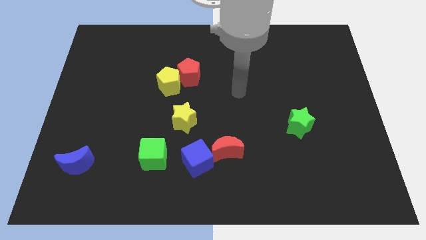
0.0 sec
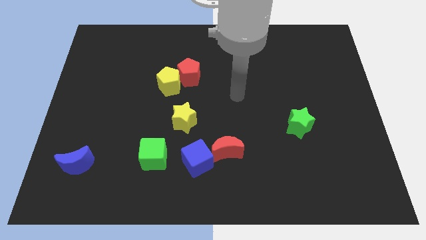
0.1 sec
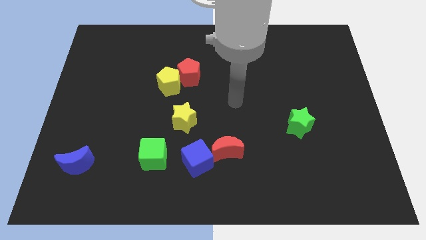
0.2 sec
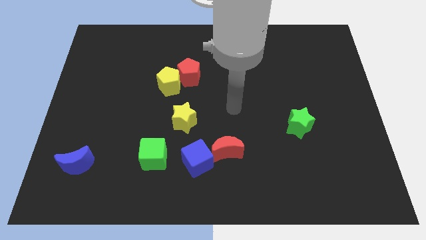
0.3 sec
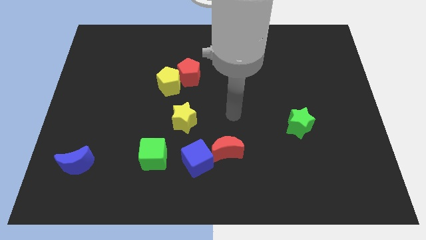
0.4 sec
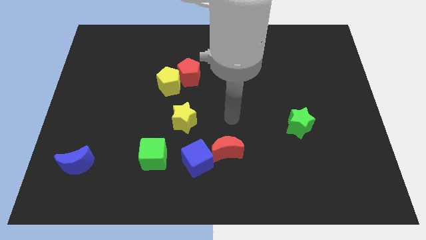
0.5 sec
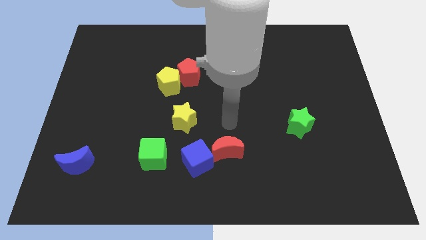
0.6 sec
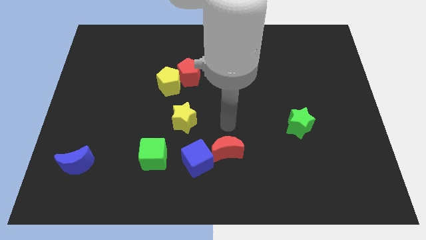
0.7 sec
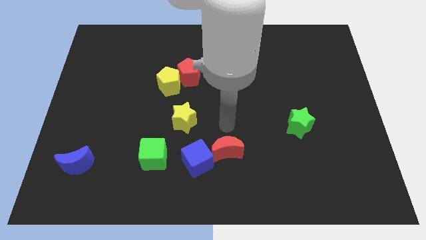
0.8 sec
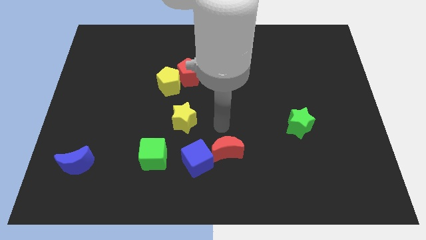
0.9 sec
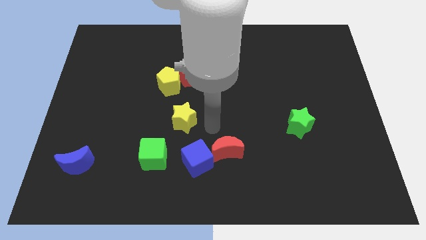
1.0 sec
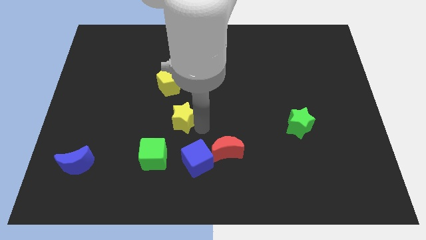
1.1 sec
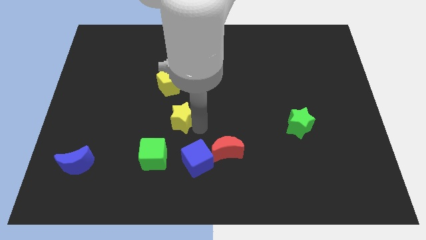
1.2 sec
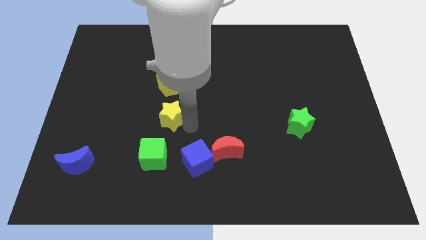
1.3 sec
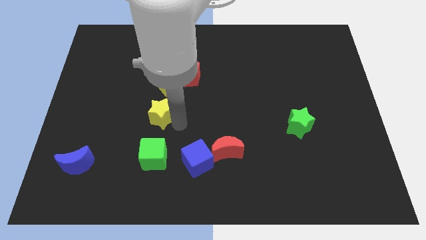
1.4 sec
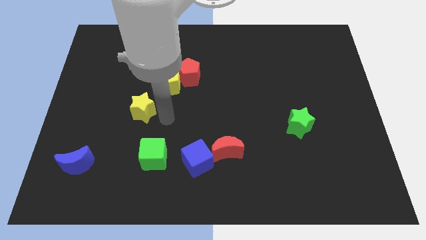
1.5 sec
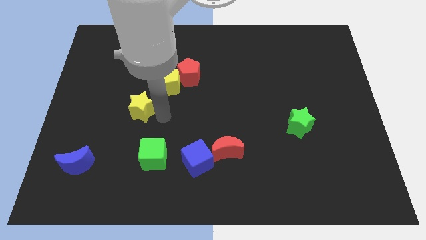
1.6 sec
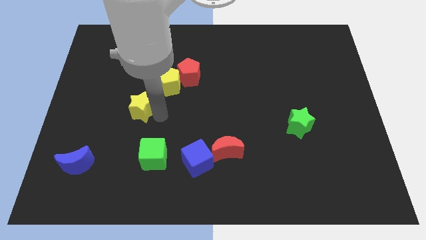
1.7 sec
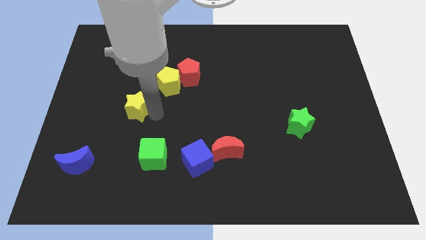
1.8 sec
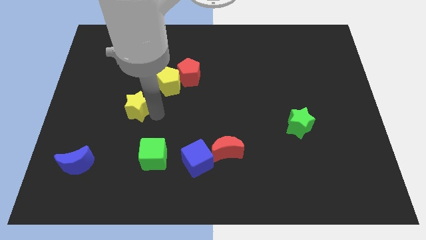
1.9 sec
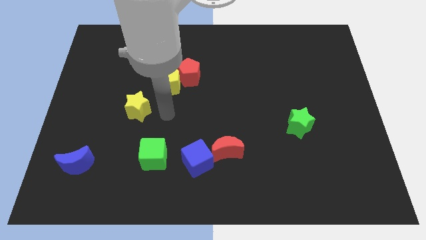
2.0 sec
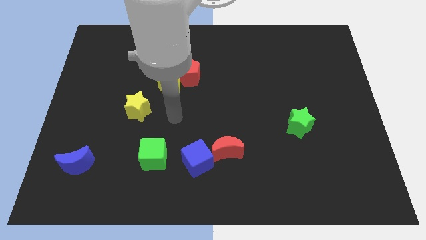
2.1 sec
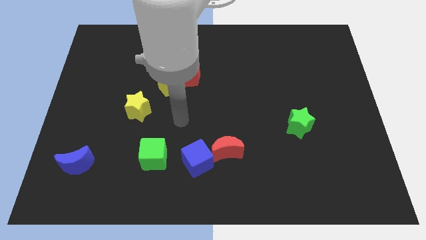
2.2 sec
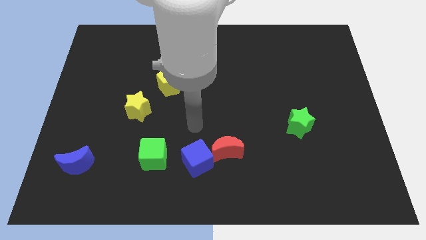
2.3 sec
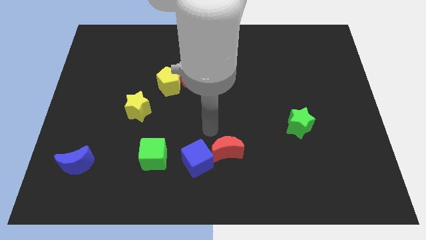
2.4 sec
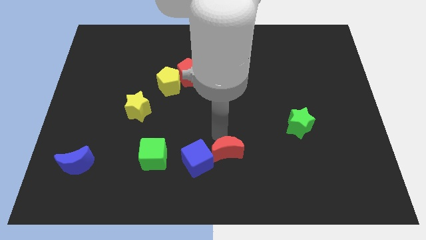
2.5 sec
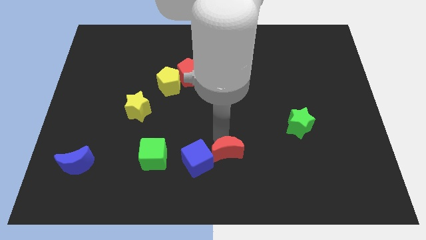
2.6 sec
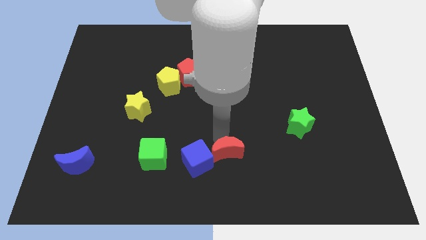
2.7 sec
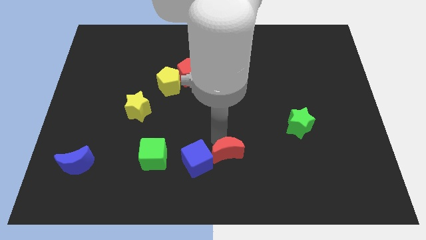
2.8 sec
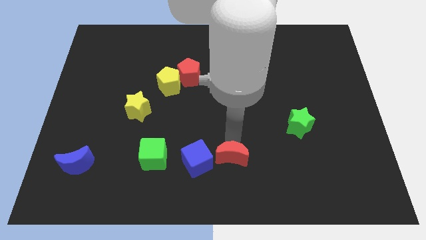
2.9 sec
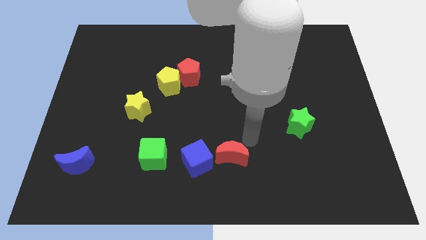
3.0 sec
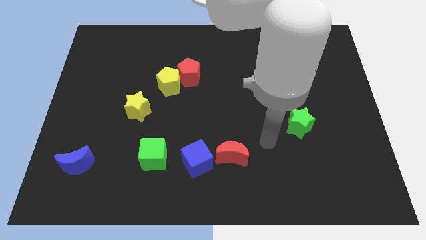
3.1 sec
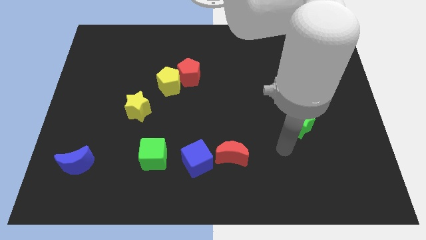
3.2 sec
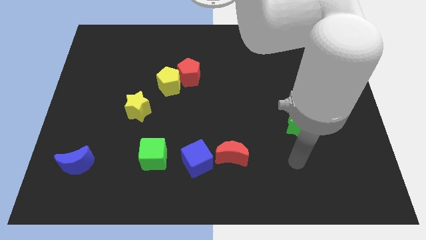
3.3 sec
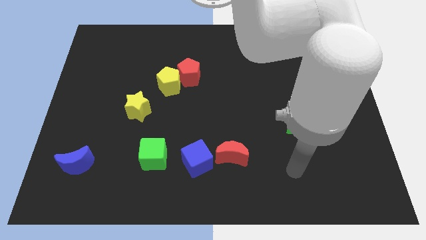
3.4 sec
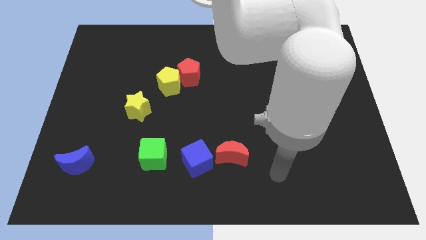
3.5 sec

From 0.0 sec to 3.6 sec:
push the yellow star vertically to the yellow pentagon

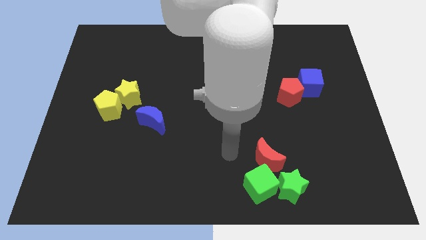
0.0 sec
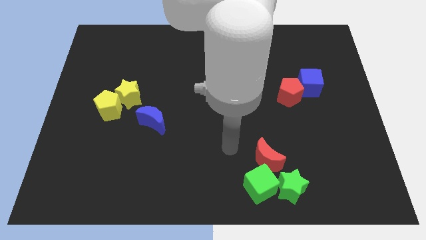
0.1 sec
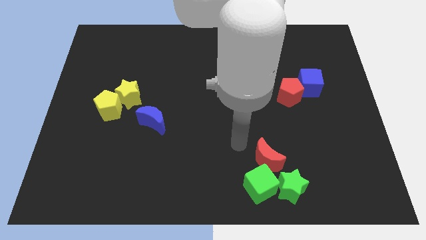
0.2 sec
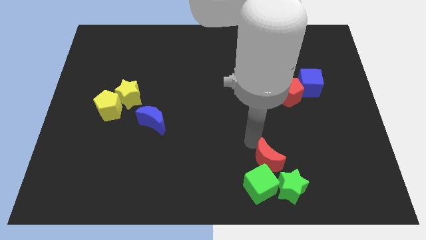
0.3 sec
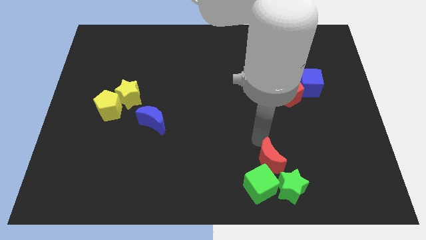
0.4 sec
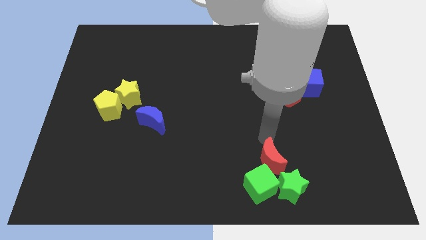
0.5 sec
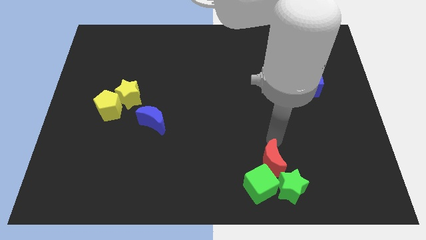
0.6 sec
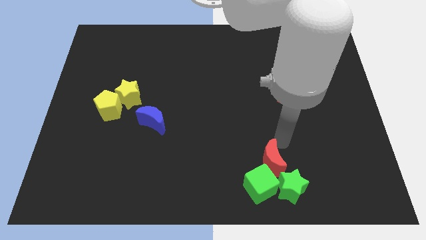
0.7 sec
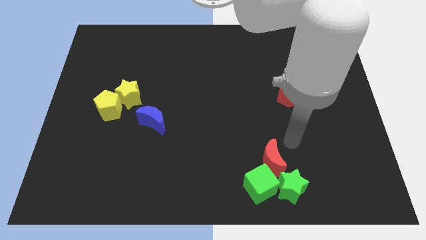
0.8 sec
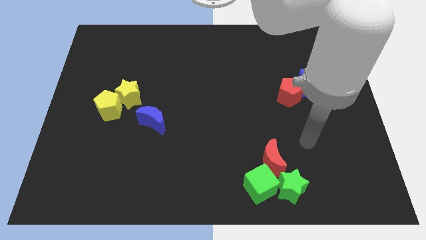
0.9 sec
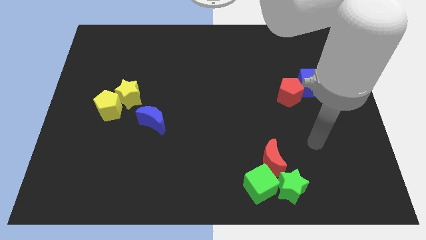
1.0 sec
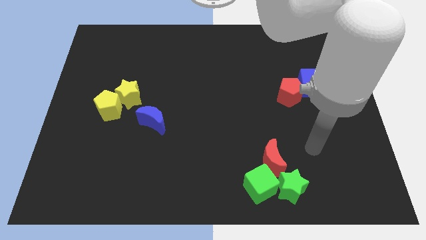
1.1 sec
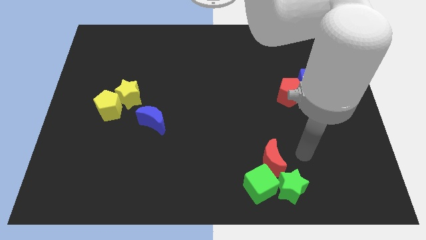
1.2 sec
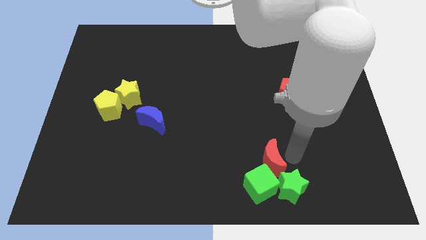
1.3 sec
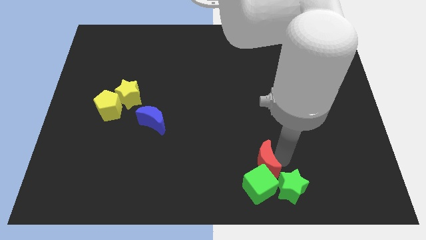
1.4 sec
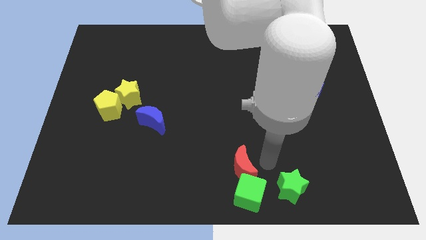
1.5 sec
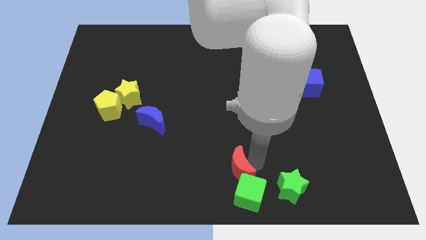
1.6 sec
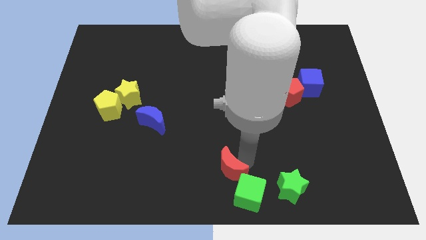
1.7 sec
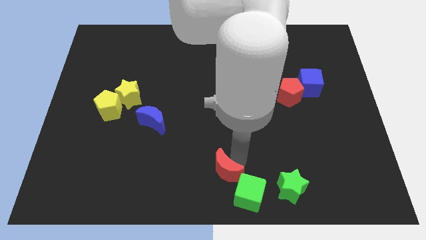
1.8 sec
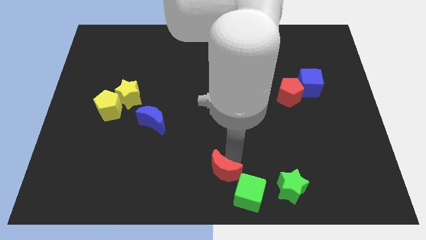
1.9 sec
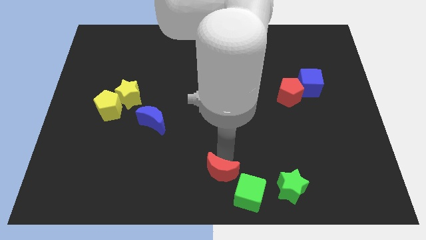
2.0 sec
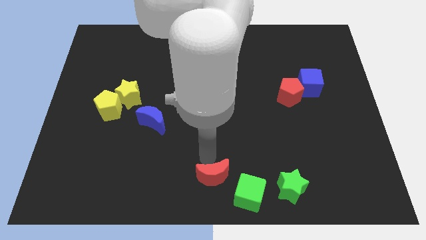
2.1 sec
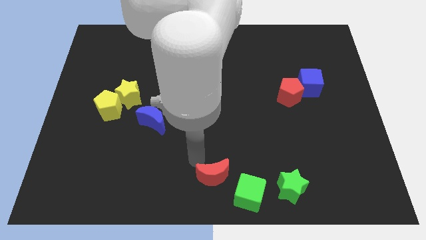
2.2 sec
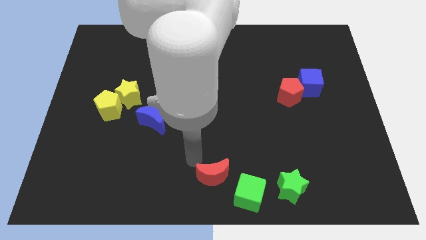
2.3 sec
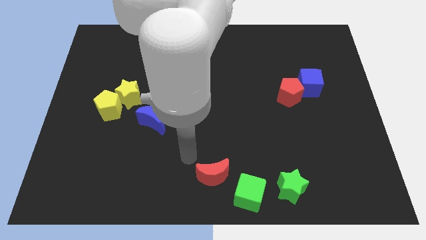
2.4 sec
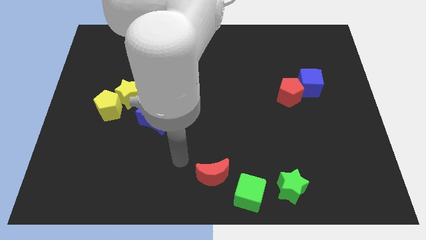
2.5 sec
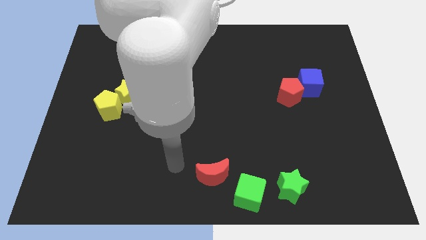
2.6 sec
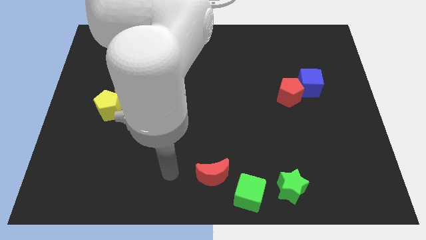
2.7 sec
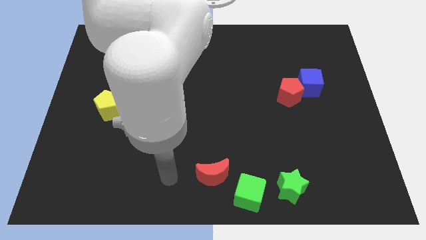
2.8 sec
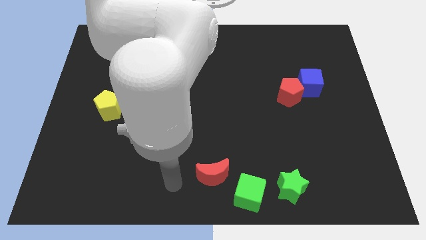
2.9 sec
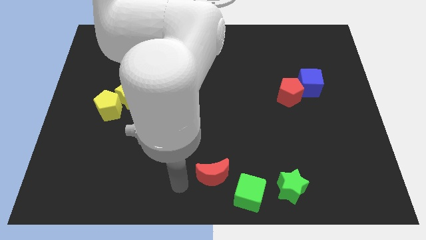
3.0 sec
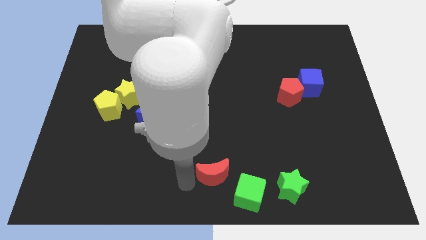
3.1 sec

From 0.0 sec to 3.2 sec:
separate the red crescent from green cube

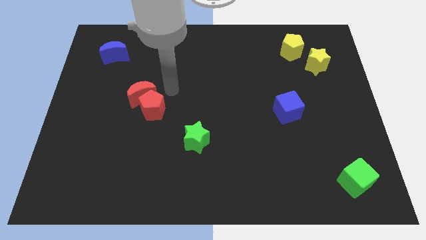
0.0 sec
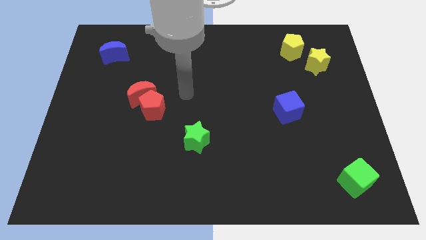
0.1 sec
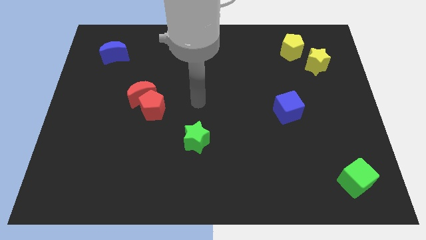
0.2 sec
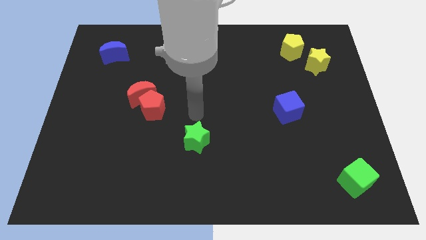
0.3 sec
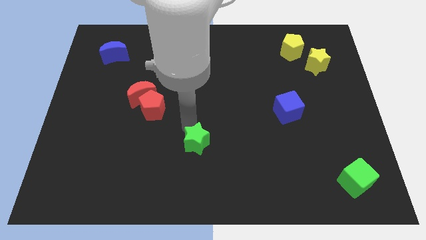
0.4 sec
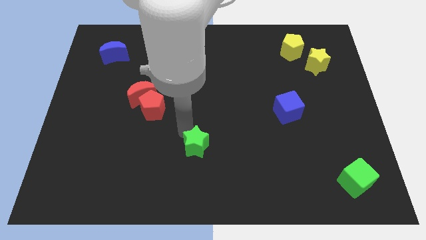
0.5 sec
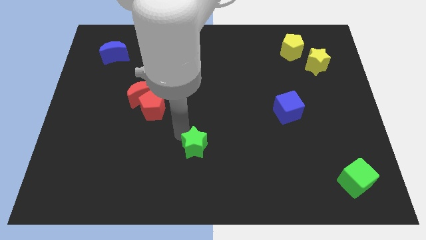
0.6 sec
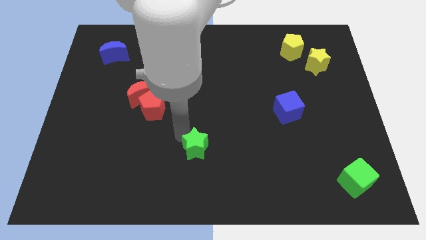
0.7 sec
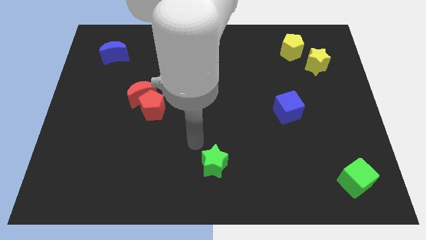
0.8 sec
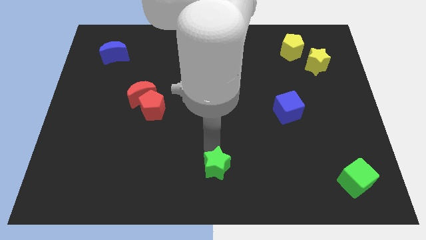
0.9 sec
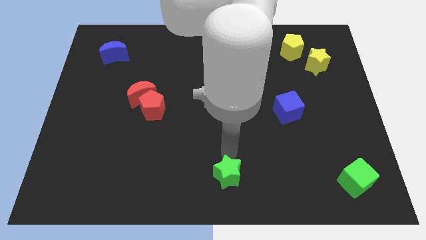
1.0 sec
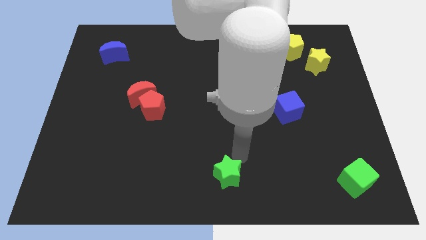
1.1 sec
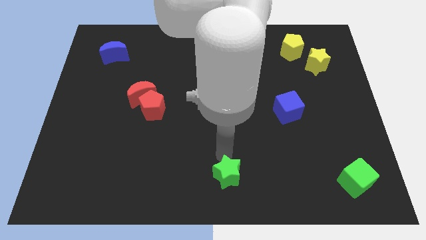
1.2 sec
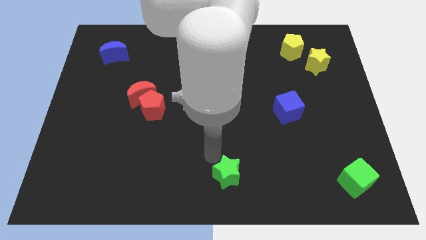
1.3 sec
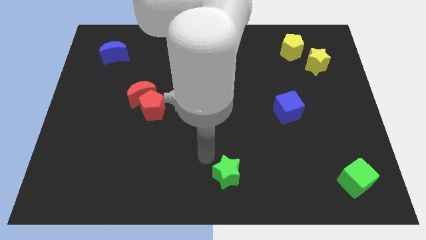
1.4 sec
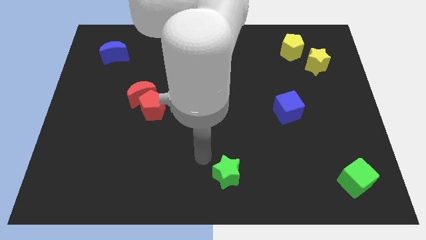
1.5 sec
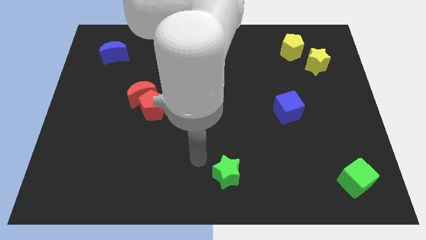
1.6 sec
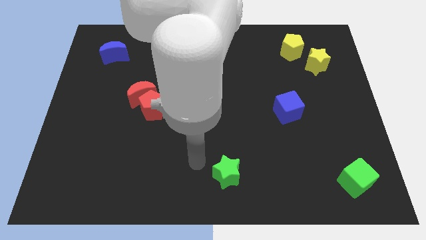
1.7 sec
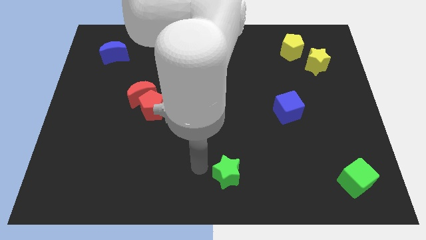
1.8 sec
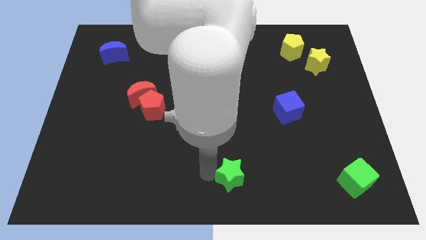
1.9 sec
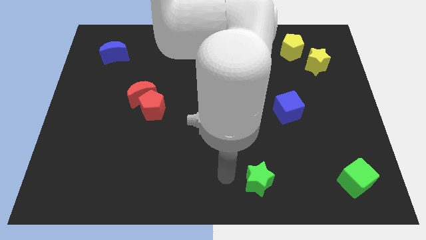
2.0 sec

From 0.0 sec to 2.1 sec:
move the green star towards bottom center of the board
